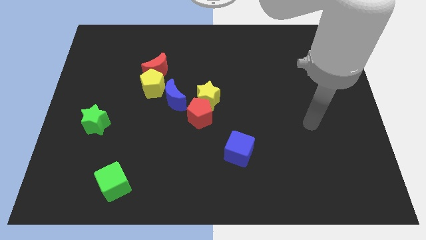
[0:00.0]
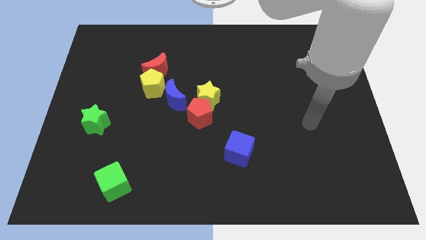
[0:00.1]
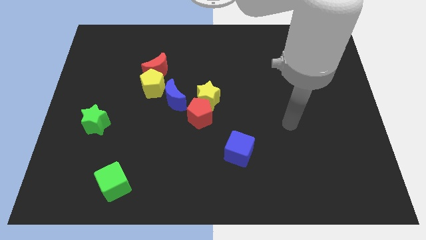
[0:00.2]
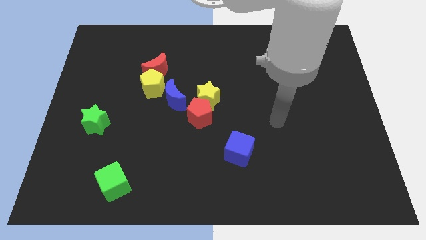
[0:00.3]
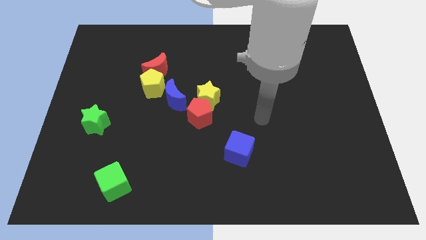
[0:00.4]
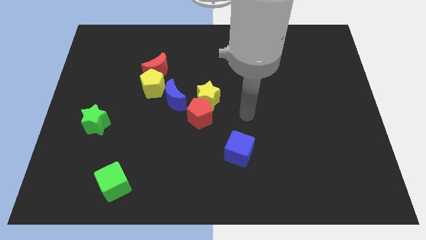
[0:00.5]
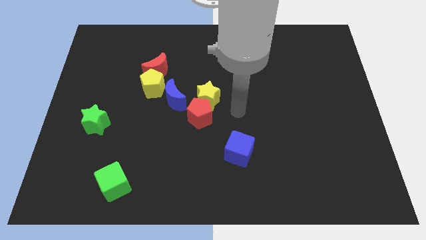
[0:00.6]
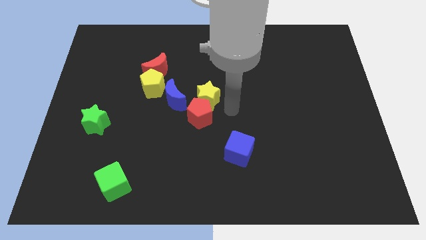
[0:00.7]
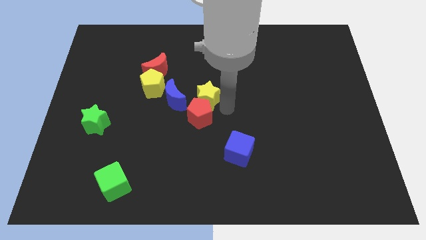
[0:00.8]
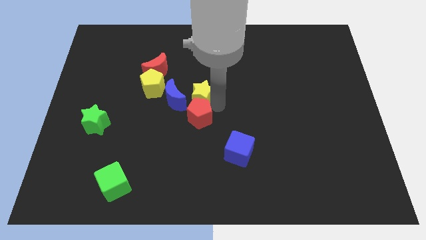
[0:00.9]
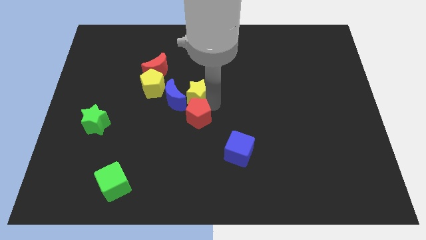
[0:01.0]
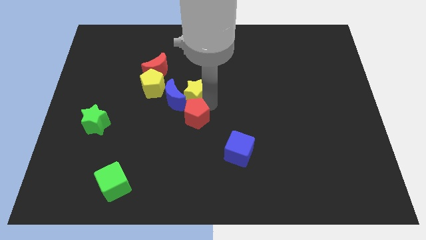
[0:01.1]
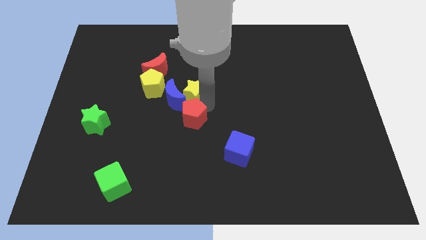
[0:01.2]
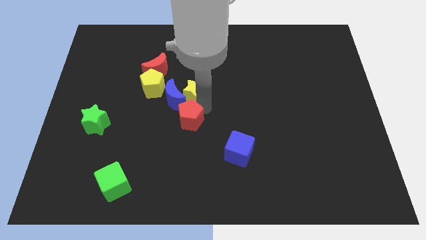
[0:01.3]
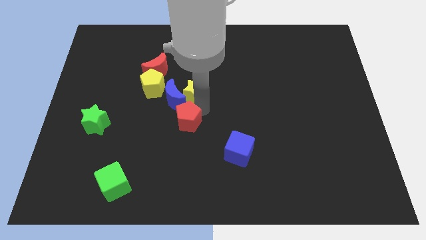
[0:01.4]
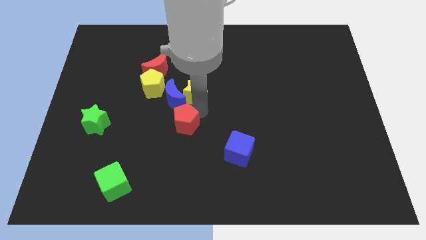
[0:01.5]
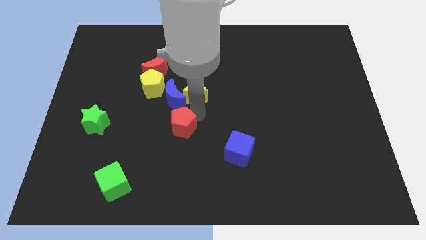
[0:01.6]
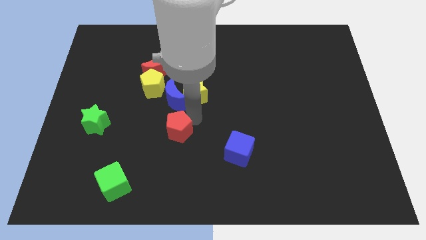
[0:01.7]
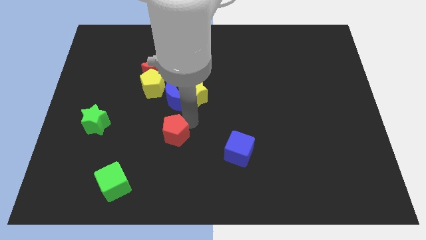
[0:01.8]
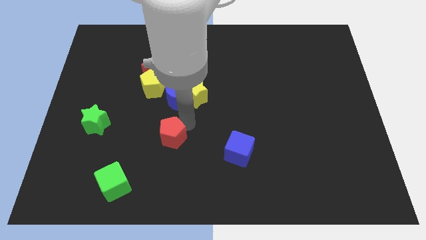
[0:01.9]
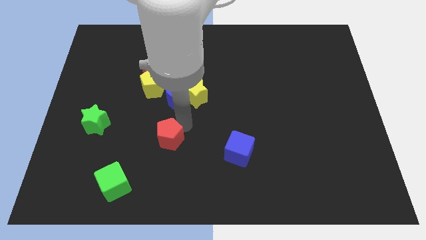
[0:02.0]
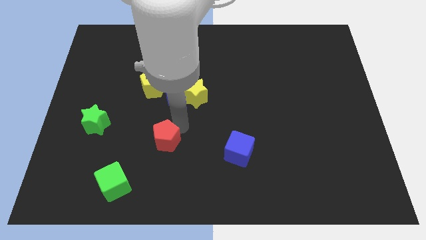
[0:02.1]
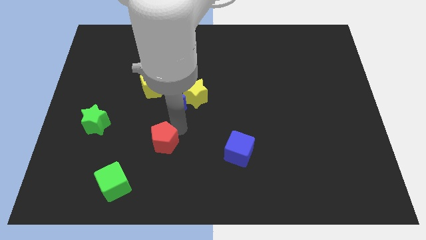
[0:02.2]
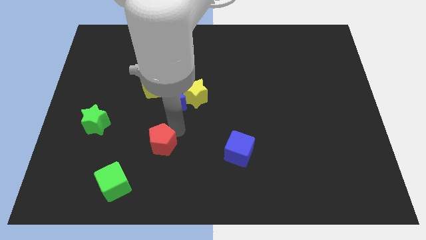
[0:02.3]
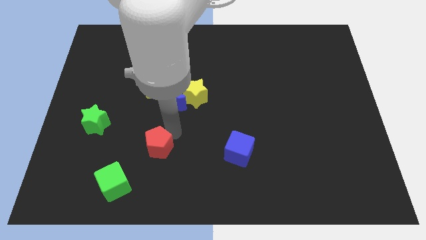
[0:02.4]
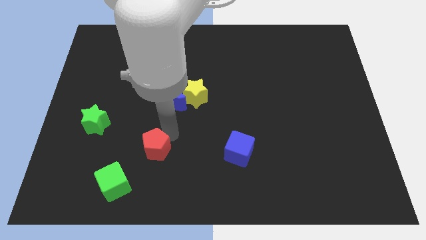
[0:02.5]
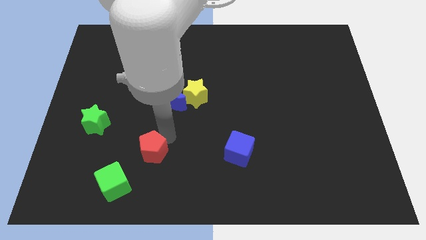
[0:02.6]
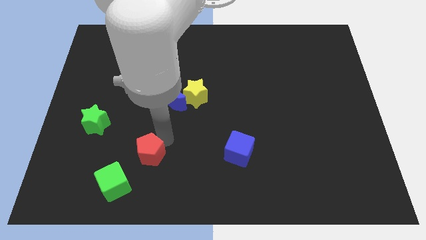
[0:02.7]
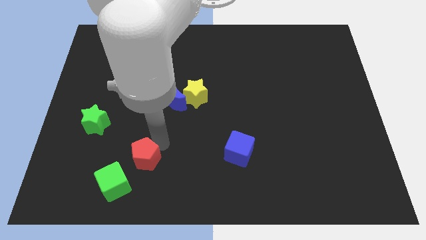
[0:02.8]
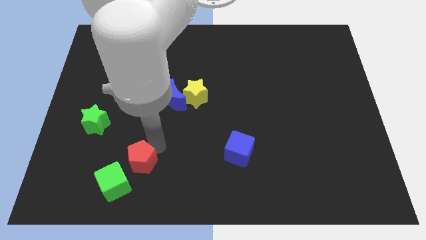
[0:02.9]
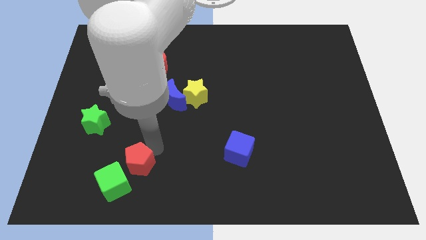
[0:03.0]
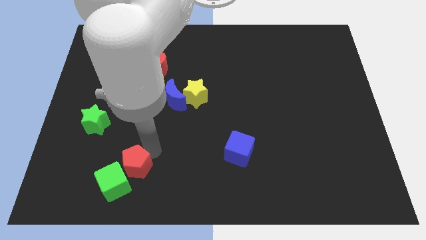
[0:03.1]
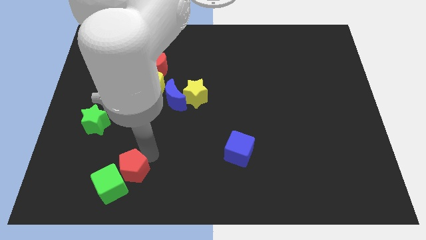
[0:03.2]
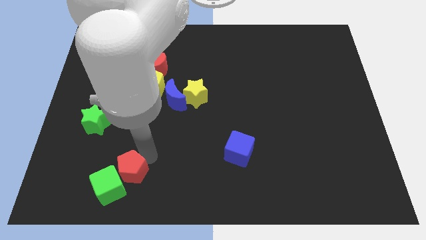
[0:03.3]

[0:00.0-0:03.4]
push the red pentagon towards the green cube

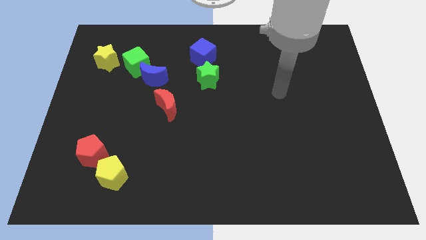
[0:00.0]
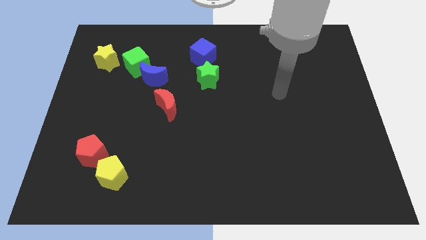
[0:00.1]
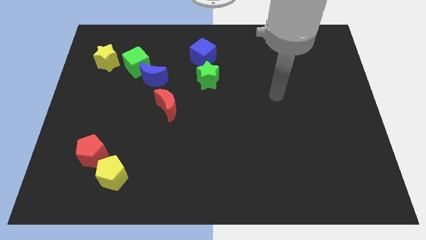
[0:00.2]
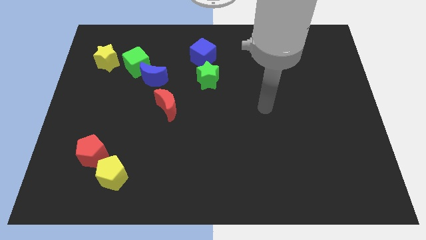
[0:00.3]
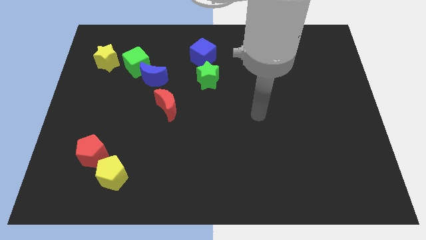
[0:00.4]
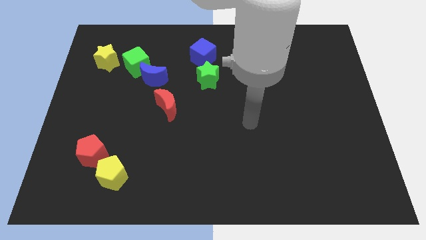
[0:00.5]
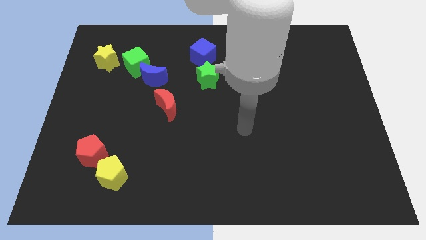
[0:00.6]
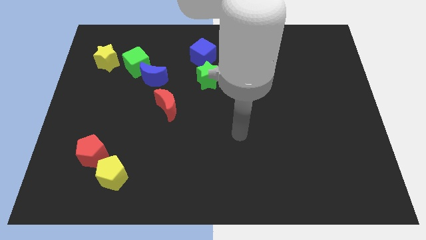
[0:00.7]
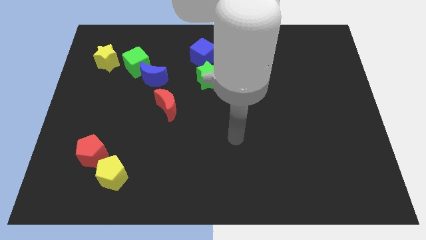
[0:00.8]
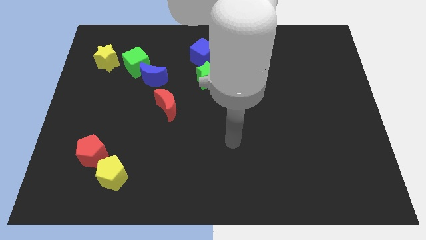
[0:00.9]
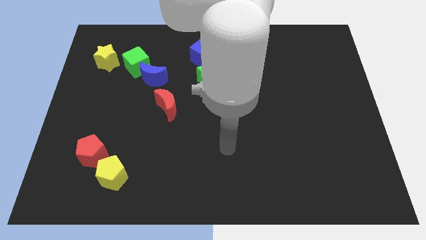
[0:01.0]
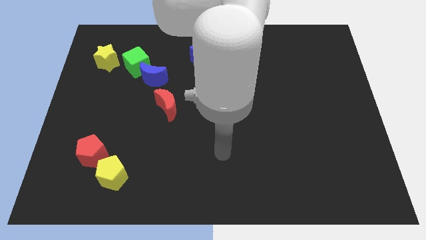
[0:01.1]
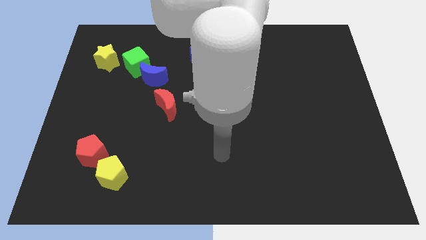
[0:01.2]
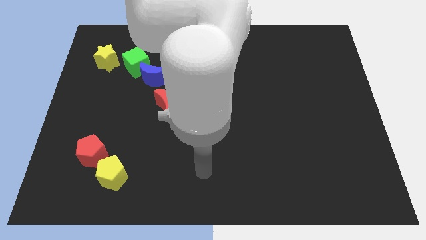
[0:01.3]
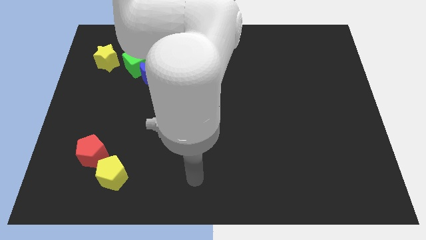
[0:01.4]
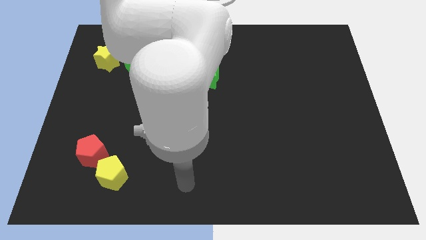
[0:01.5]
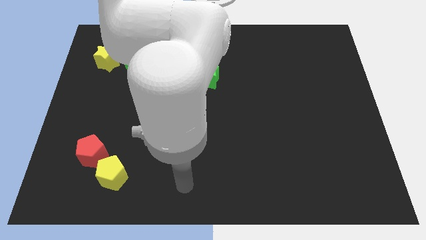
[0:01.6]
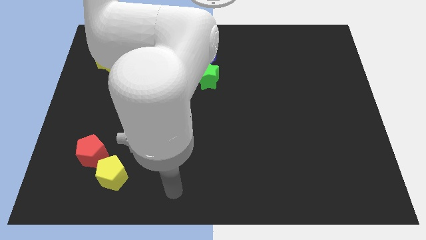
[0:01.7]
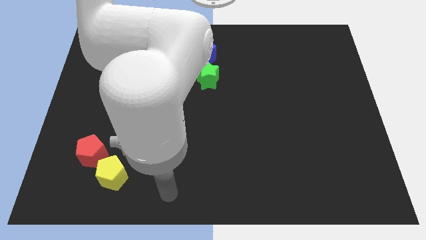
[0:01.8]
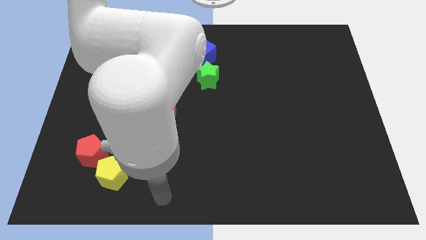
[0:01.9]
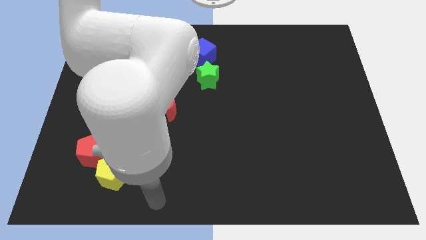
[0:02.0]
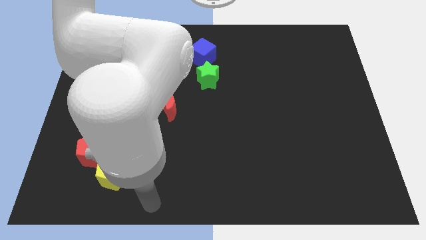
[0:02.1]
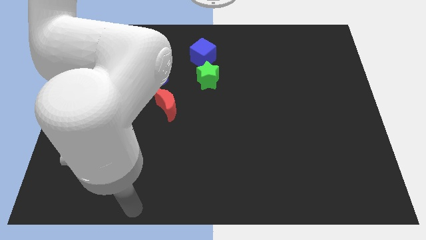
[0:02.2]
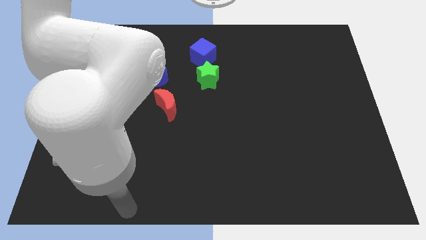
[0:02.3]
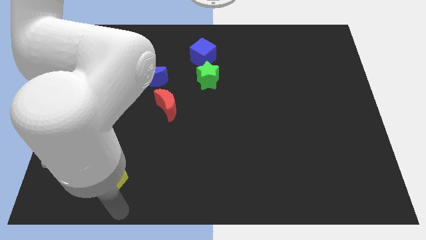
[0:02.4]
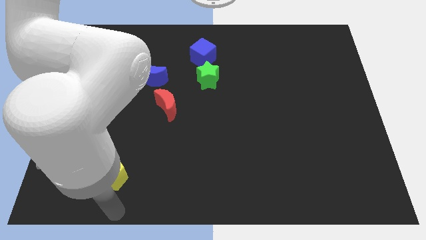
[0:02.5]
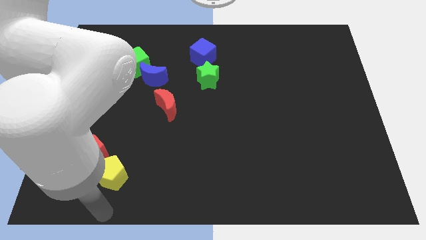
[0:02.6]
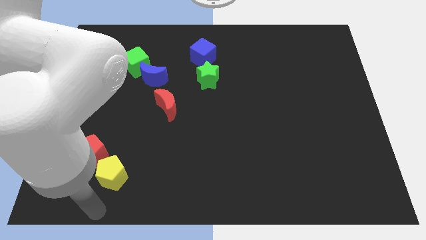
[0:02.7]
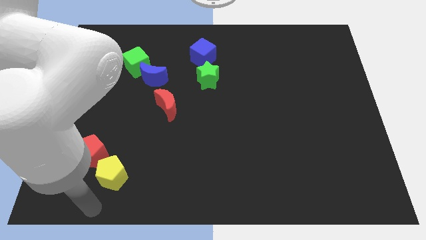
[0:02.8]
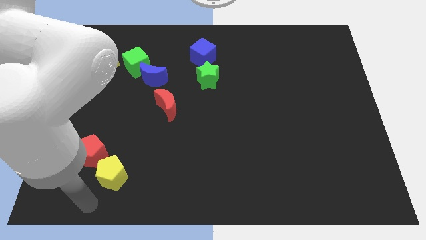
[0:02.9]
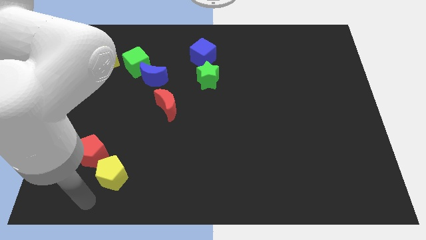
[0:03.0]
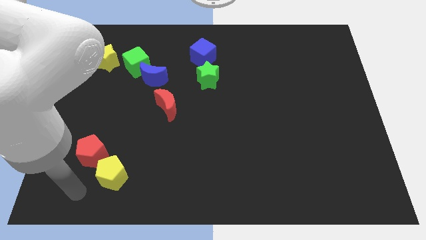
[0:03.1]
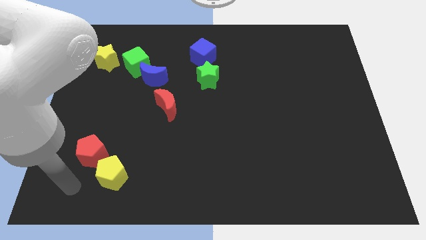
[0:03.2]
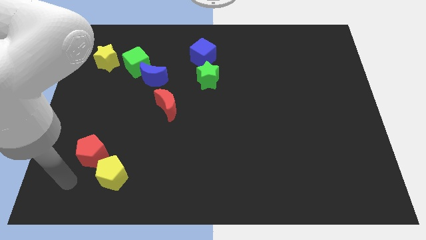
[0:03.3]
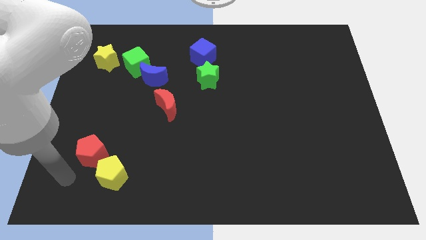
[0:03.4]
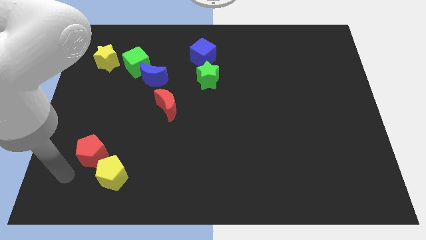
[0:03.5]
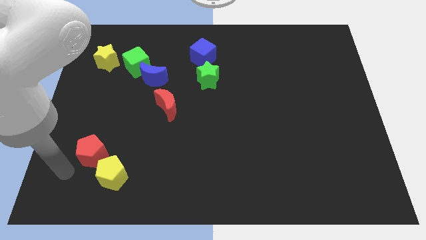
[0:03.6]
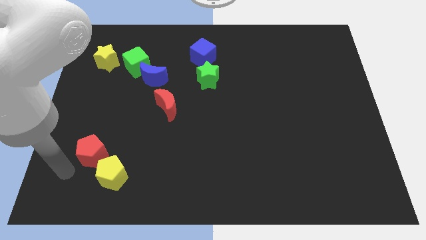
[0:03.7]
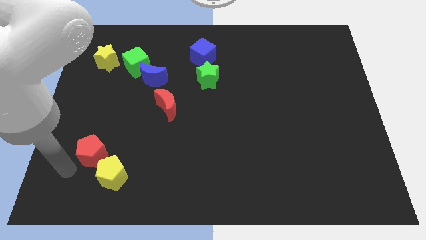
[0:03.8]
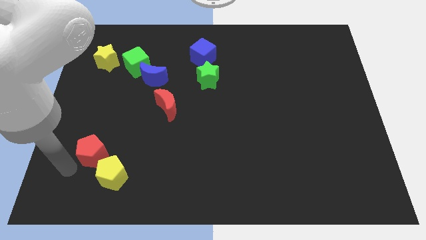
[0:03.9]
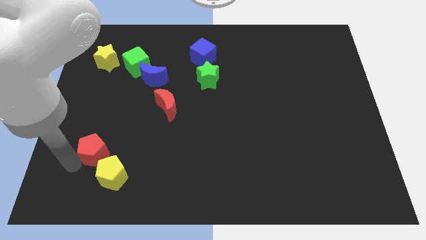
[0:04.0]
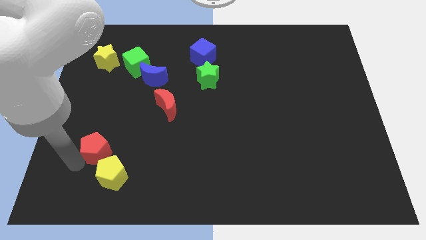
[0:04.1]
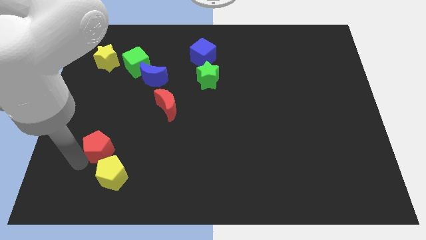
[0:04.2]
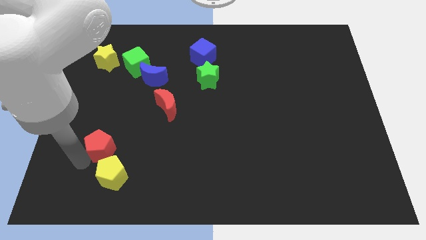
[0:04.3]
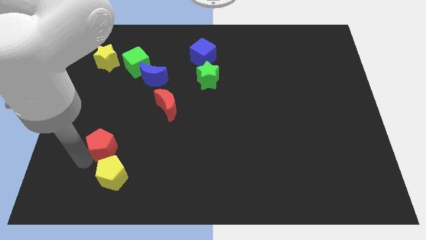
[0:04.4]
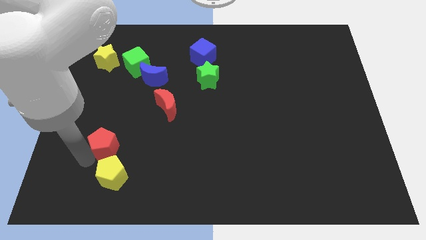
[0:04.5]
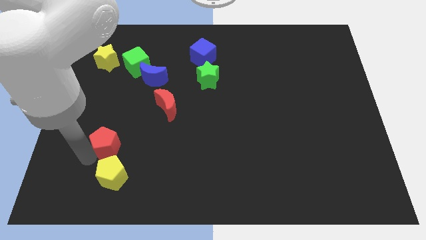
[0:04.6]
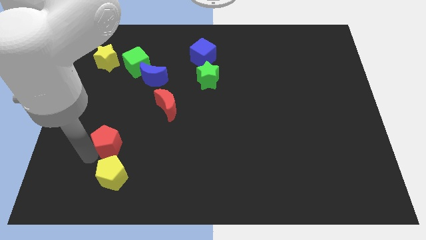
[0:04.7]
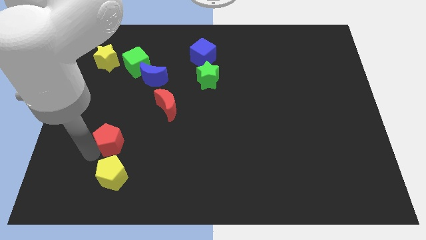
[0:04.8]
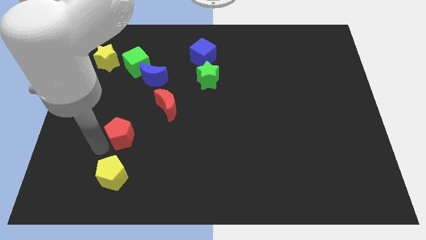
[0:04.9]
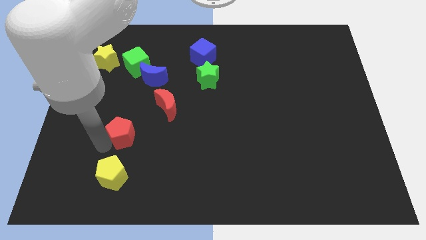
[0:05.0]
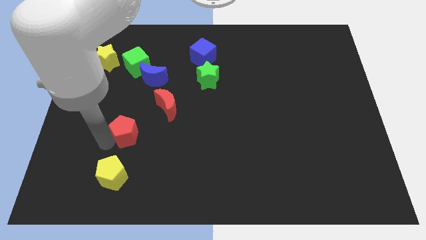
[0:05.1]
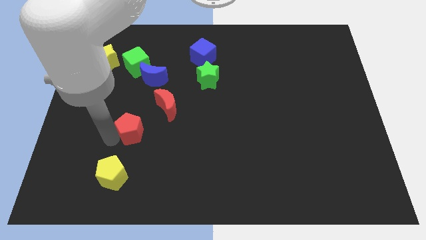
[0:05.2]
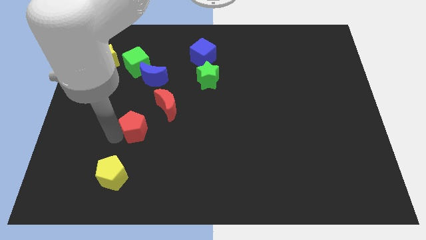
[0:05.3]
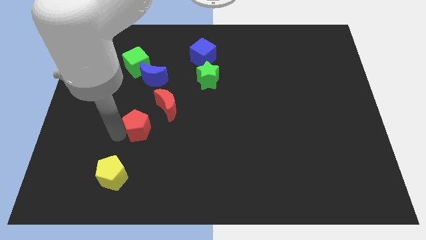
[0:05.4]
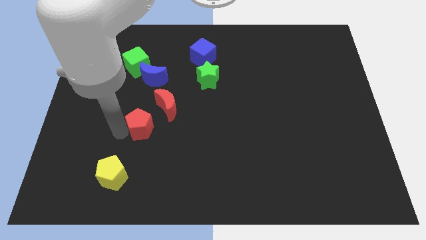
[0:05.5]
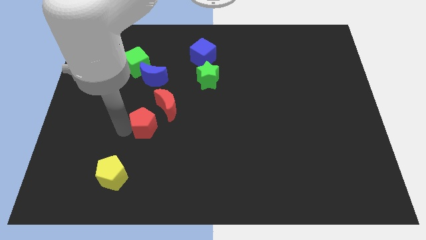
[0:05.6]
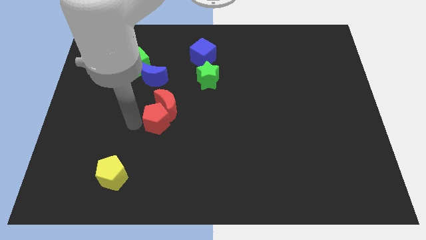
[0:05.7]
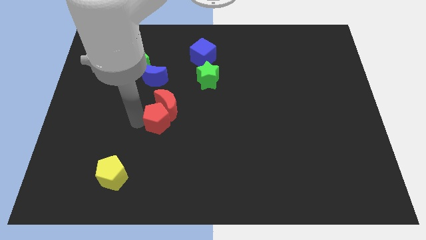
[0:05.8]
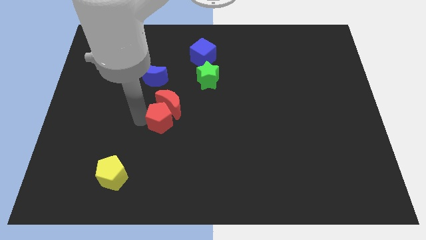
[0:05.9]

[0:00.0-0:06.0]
slide the red pentagon close to the red moon
